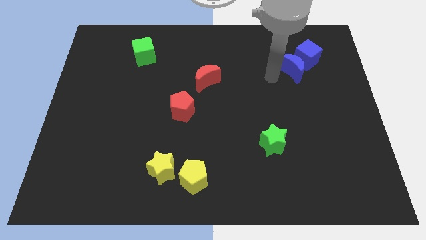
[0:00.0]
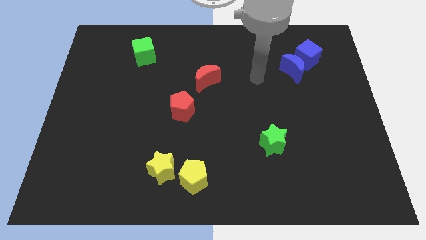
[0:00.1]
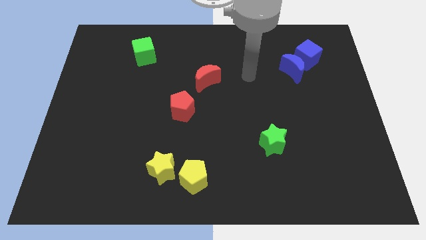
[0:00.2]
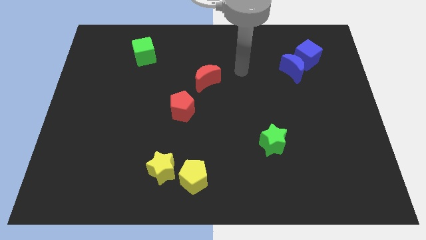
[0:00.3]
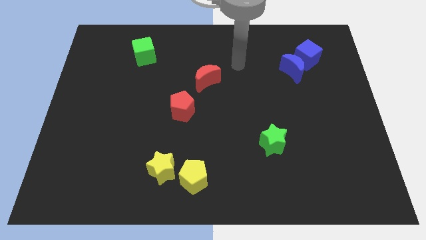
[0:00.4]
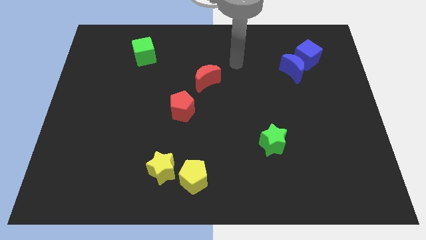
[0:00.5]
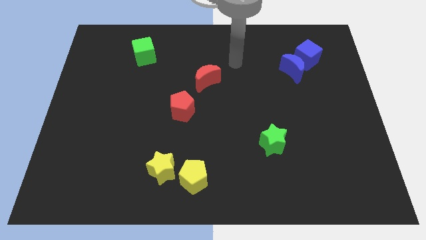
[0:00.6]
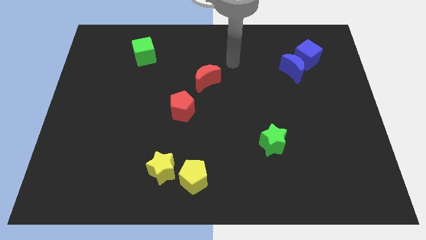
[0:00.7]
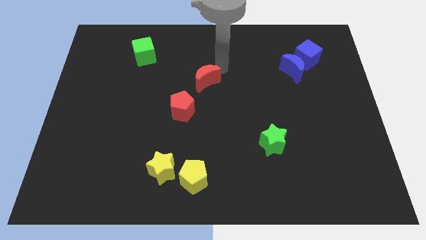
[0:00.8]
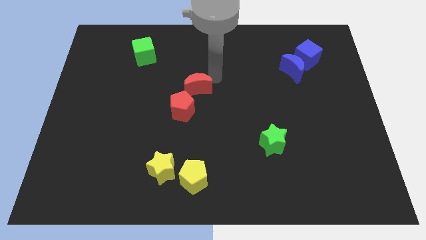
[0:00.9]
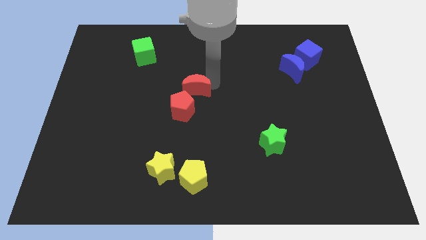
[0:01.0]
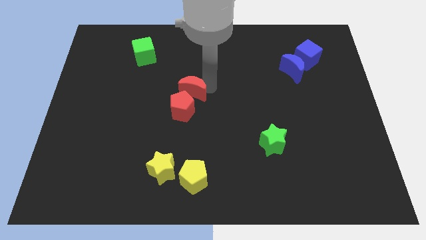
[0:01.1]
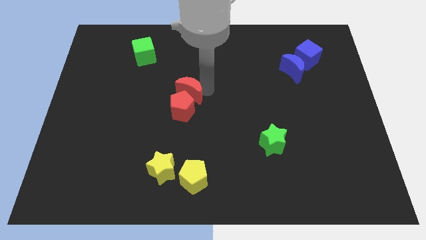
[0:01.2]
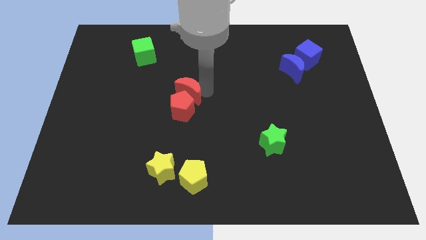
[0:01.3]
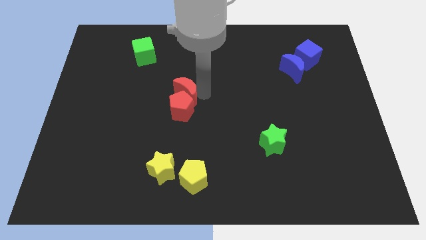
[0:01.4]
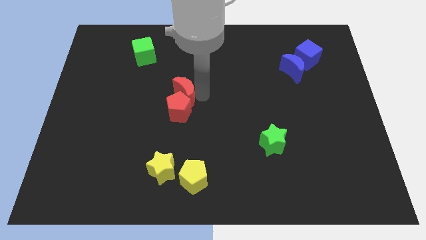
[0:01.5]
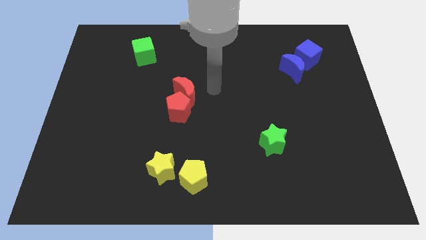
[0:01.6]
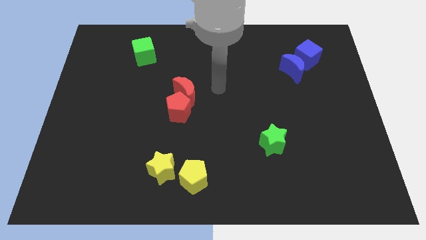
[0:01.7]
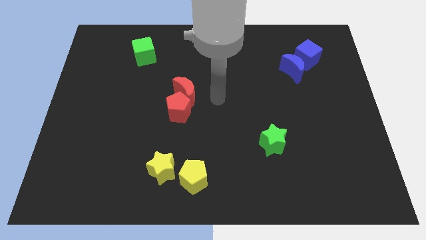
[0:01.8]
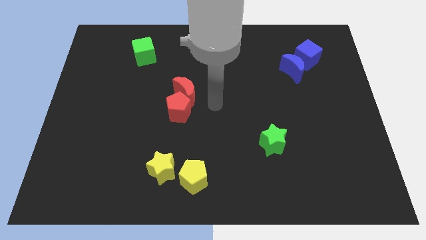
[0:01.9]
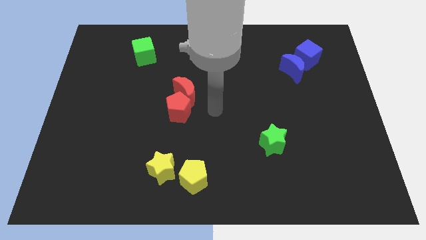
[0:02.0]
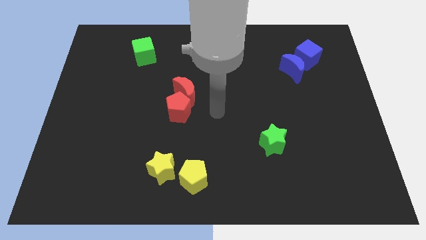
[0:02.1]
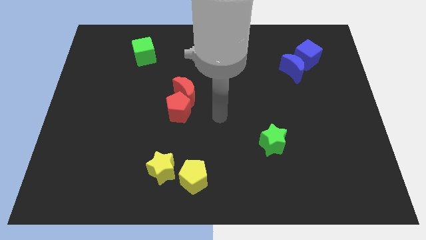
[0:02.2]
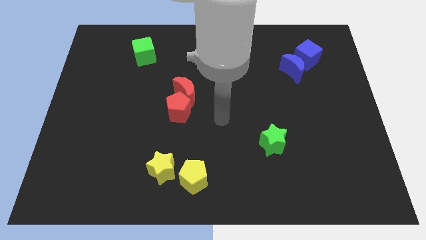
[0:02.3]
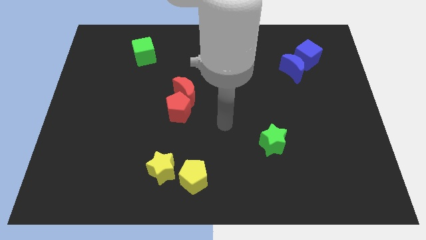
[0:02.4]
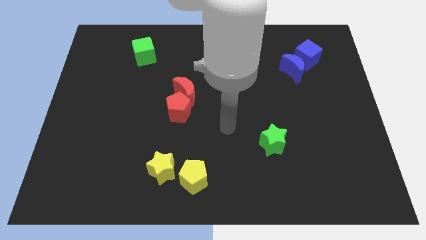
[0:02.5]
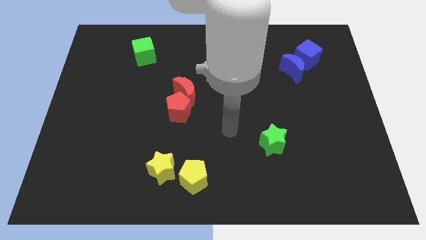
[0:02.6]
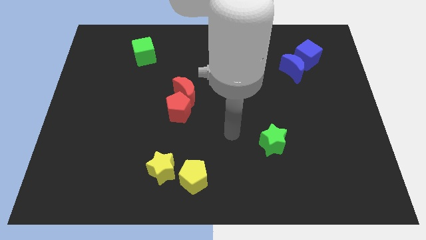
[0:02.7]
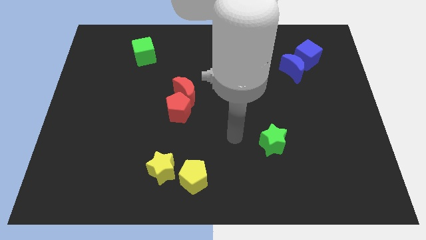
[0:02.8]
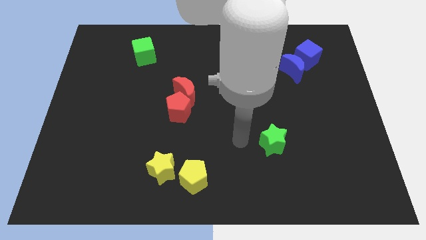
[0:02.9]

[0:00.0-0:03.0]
move the red crescent below the red pentagon

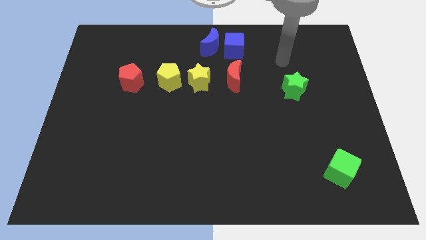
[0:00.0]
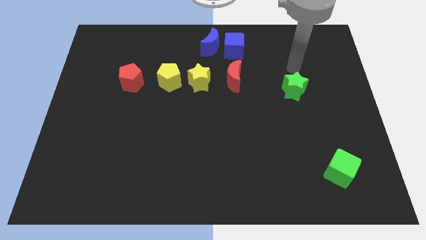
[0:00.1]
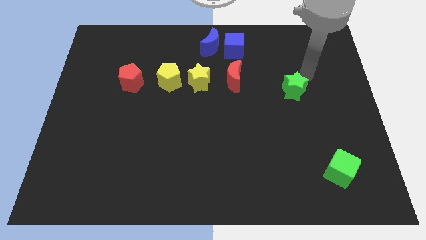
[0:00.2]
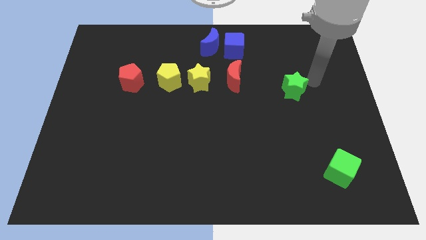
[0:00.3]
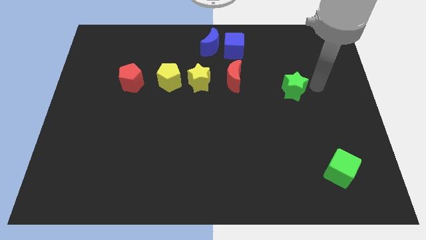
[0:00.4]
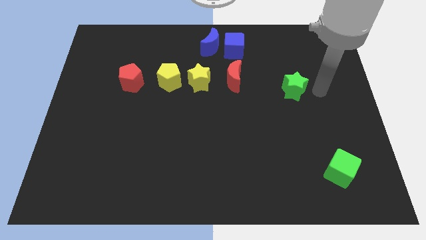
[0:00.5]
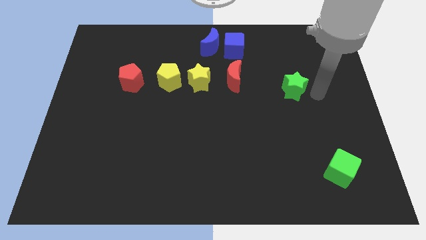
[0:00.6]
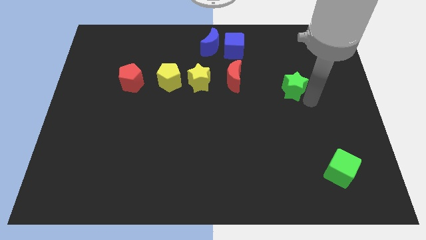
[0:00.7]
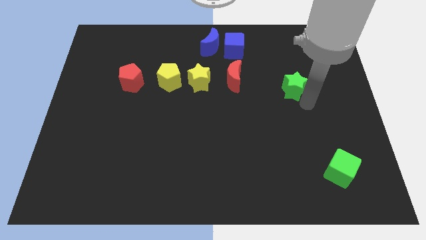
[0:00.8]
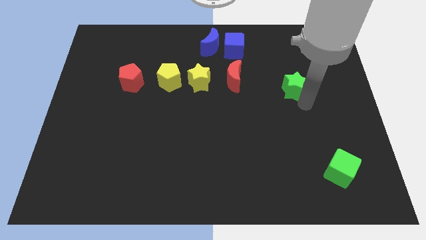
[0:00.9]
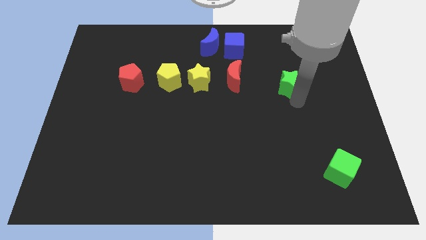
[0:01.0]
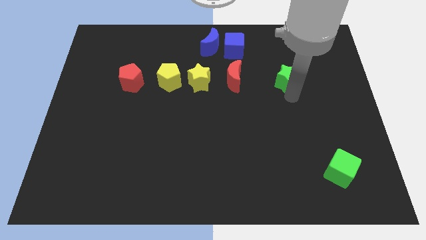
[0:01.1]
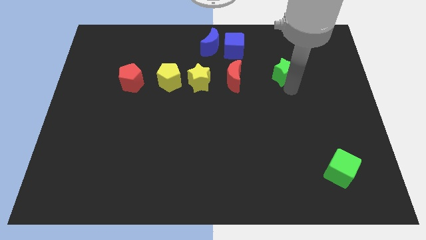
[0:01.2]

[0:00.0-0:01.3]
move the green star to the right side of the red moon

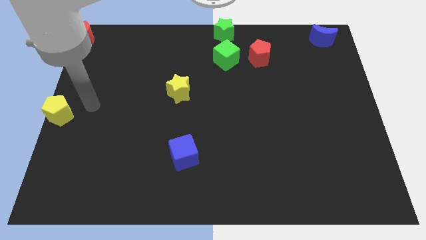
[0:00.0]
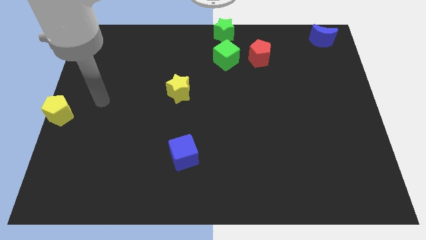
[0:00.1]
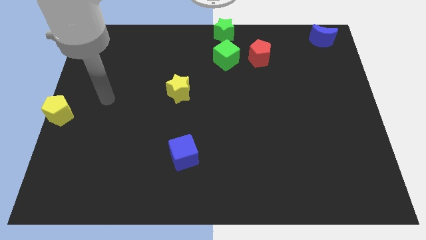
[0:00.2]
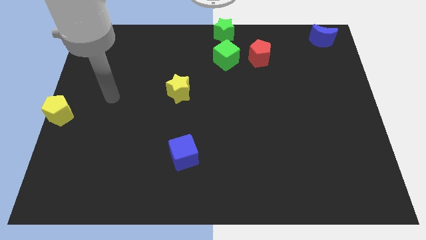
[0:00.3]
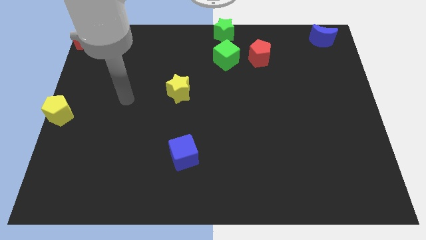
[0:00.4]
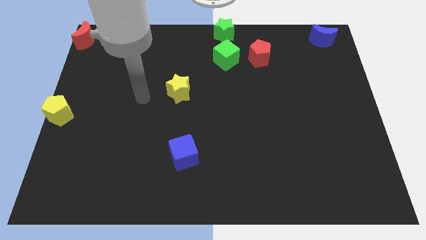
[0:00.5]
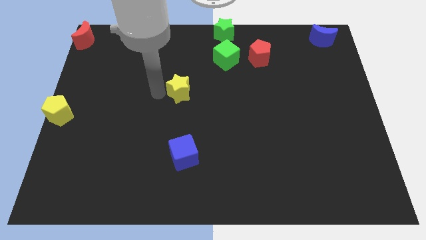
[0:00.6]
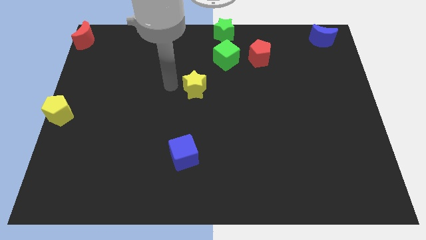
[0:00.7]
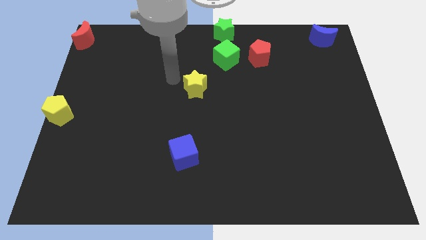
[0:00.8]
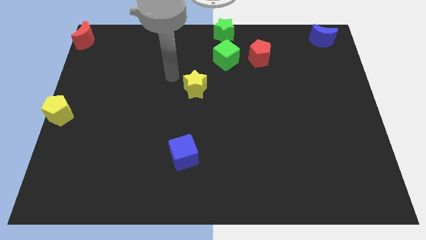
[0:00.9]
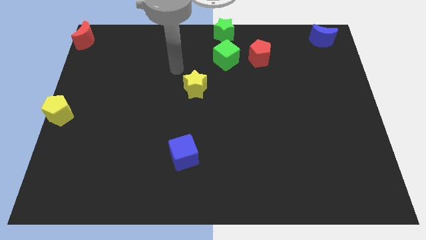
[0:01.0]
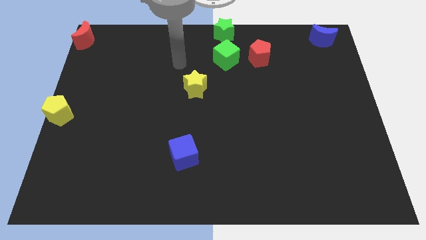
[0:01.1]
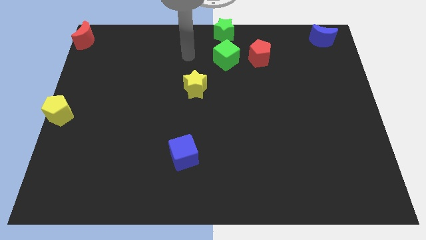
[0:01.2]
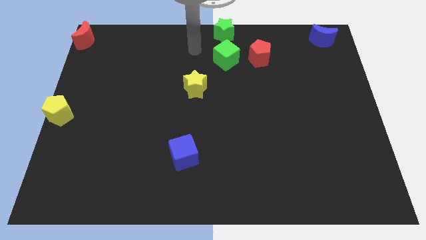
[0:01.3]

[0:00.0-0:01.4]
push the yellow star towards the right side of the board

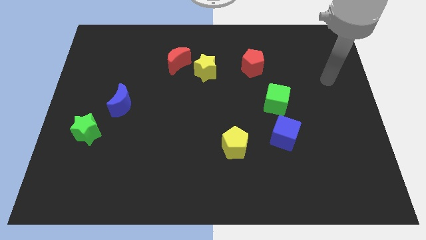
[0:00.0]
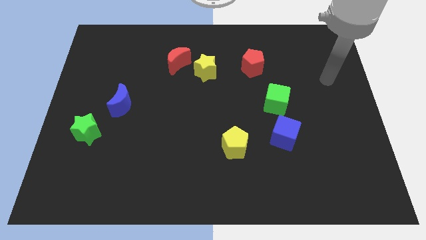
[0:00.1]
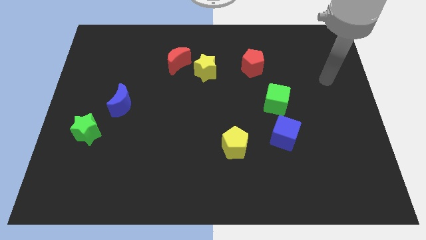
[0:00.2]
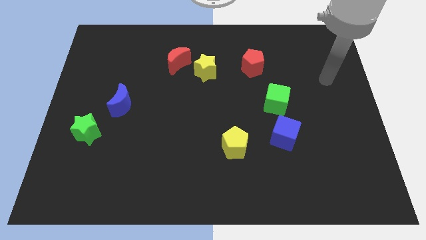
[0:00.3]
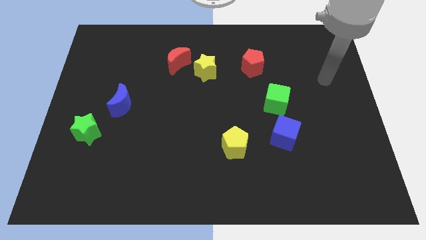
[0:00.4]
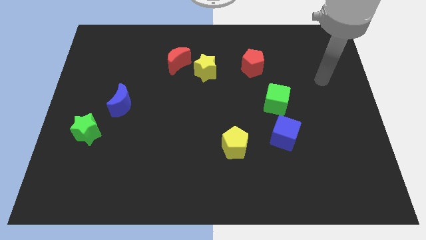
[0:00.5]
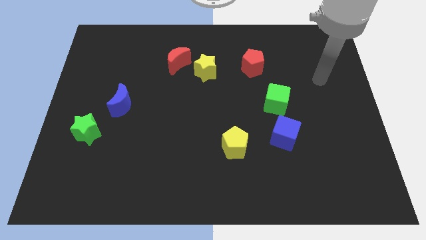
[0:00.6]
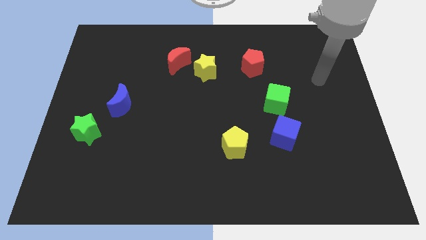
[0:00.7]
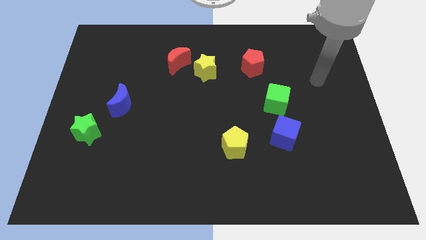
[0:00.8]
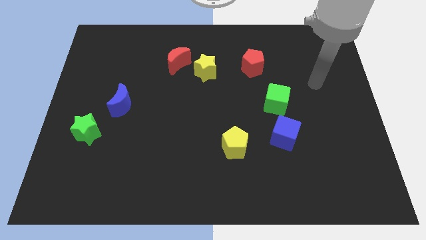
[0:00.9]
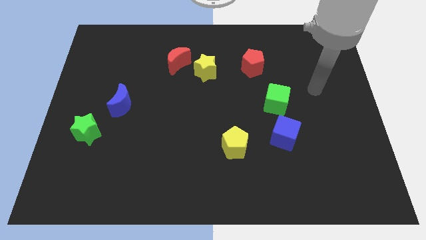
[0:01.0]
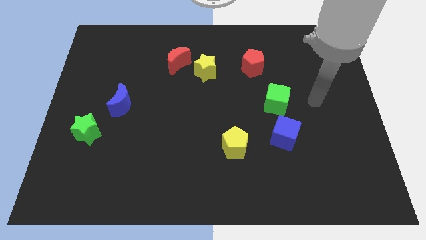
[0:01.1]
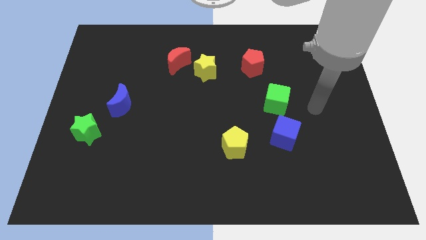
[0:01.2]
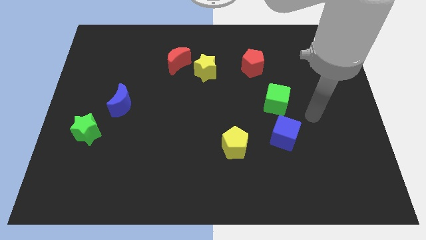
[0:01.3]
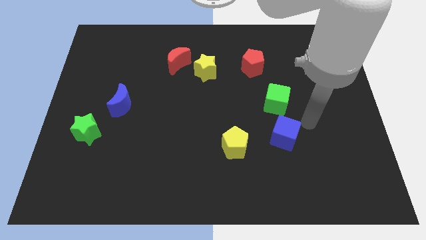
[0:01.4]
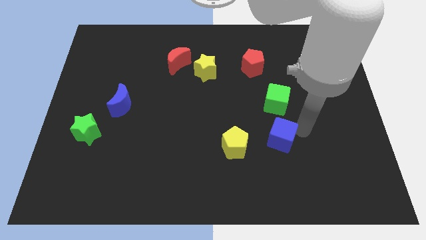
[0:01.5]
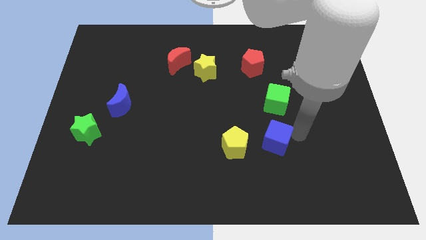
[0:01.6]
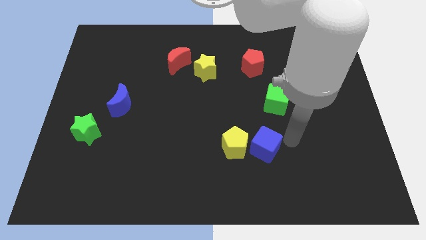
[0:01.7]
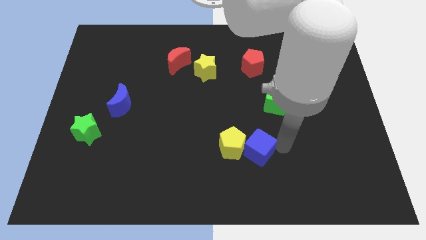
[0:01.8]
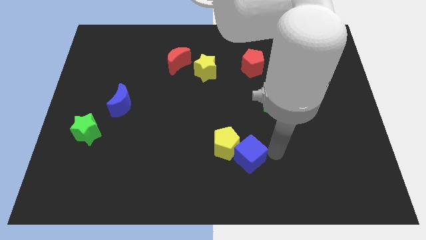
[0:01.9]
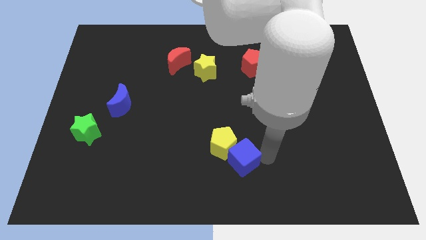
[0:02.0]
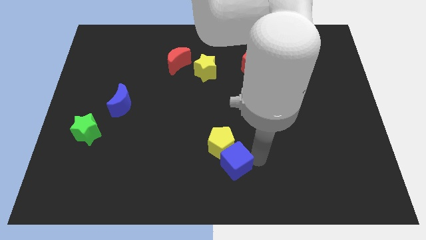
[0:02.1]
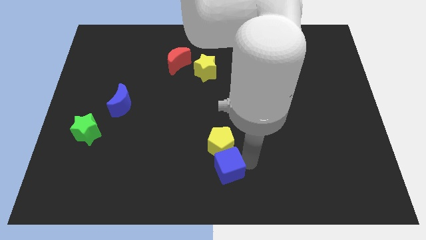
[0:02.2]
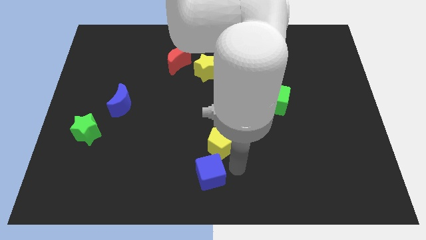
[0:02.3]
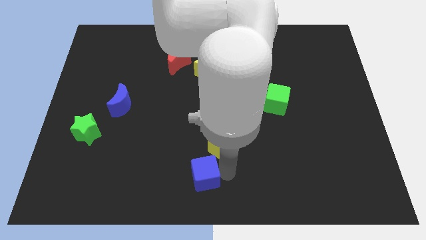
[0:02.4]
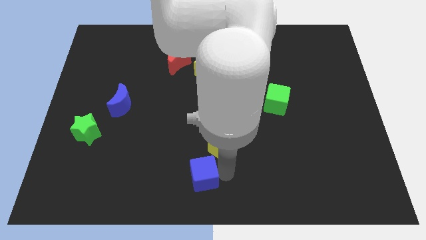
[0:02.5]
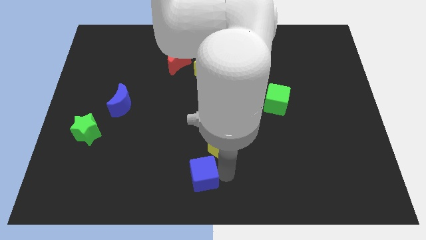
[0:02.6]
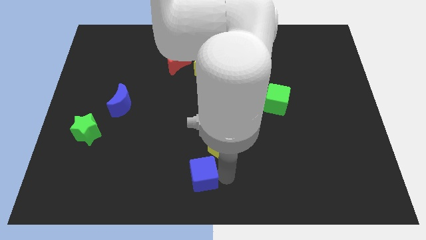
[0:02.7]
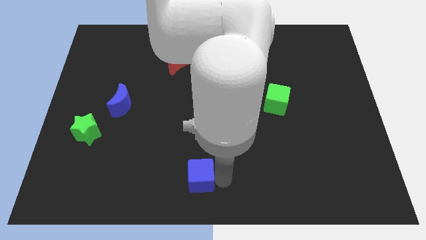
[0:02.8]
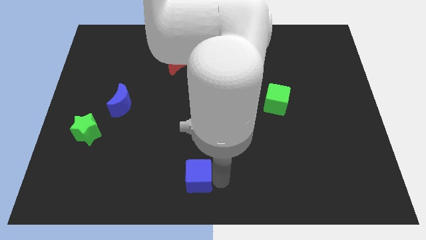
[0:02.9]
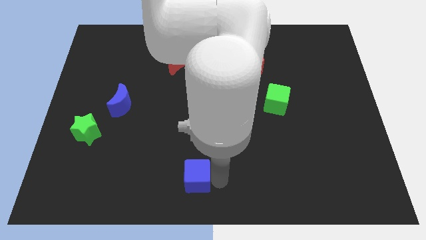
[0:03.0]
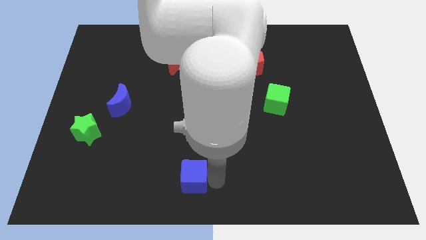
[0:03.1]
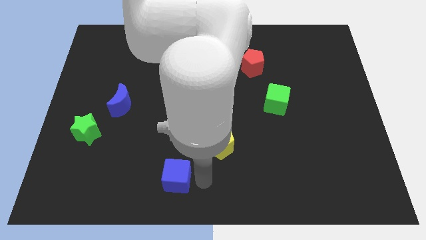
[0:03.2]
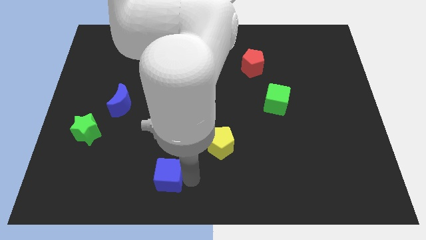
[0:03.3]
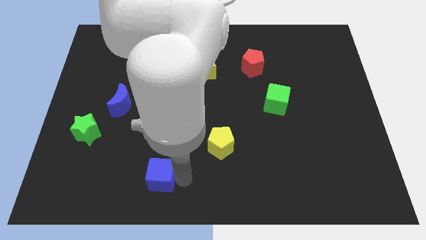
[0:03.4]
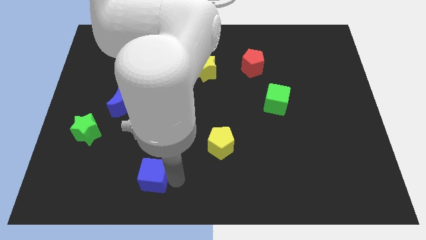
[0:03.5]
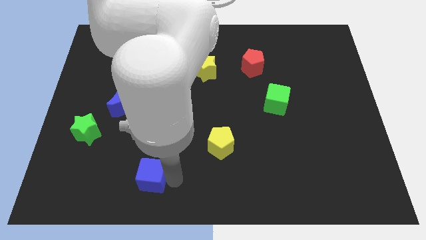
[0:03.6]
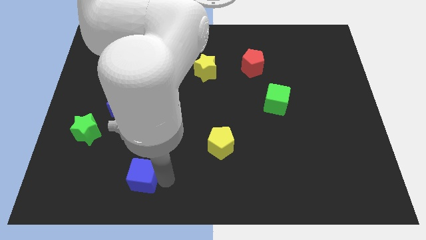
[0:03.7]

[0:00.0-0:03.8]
slide the blue cube diagonally bottom left to the yellow pentagon
